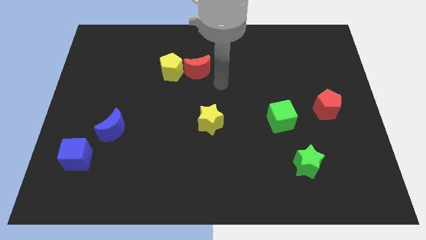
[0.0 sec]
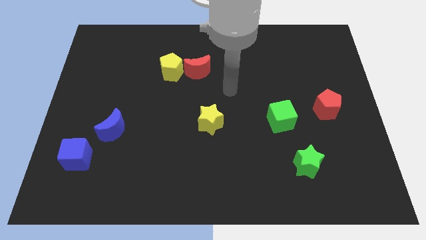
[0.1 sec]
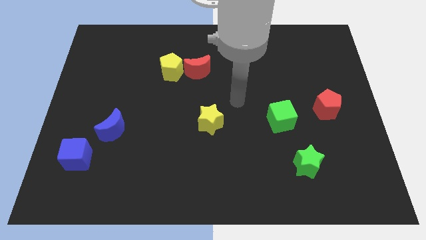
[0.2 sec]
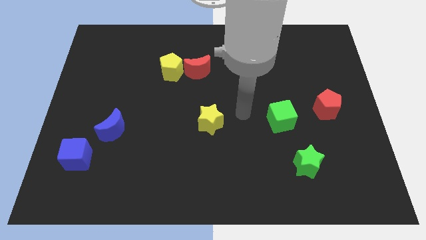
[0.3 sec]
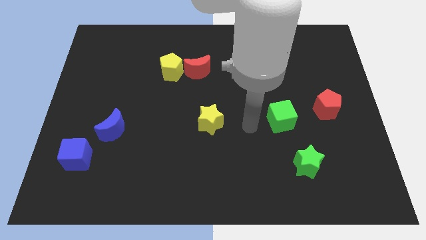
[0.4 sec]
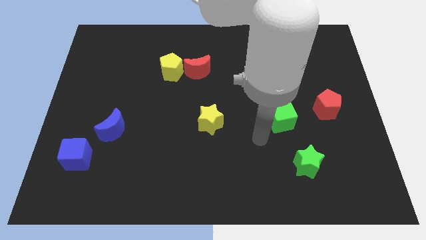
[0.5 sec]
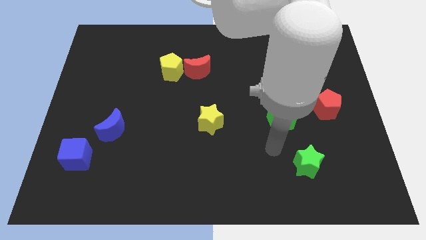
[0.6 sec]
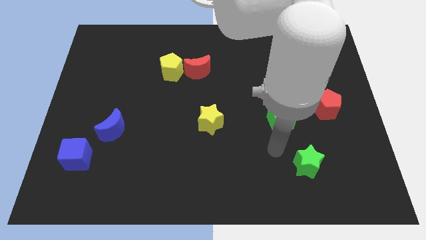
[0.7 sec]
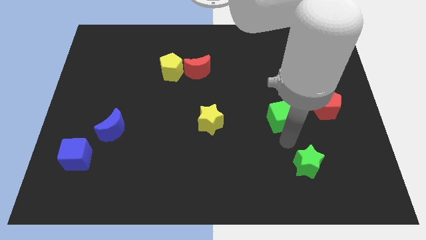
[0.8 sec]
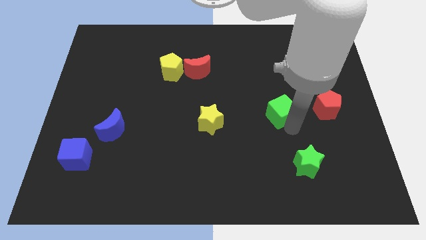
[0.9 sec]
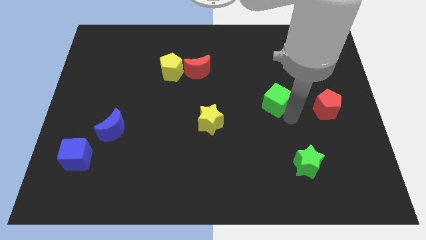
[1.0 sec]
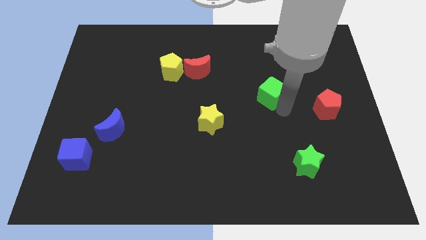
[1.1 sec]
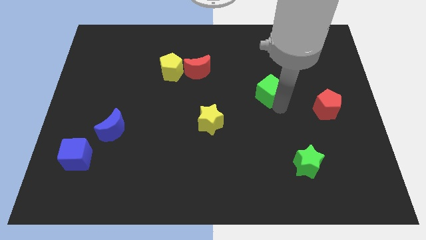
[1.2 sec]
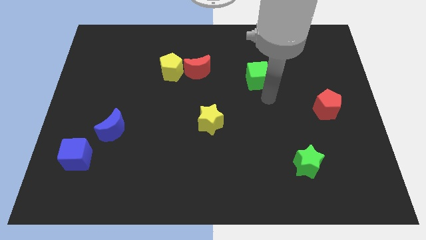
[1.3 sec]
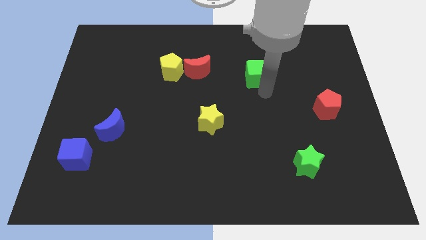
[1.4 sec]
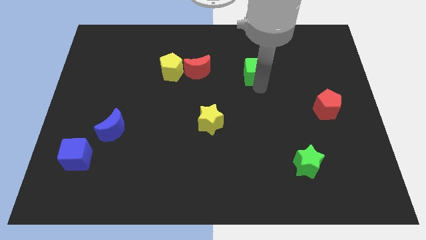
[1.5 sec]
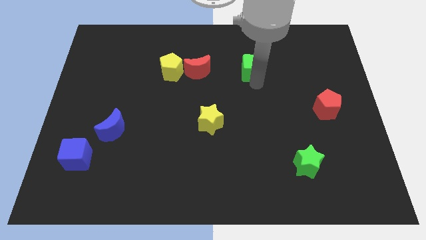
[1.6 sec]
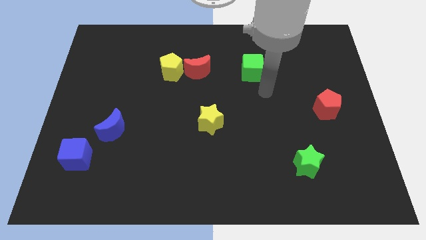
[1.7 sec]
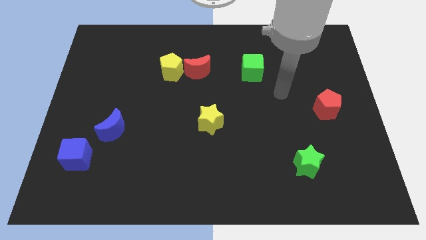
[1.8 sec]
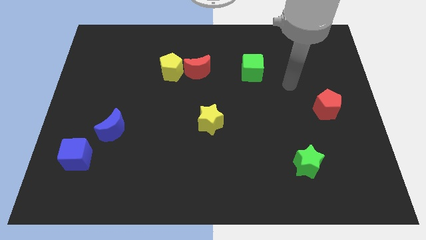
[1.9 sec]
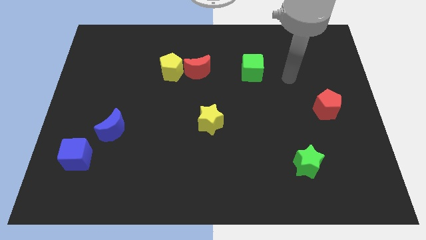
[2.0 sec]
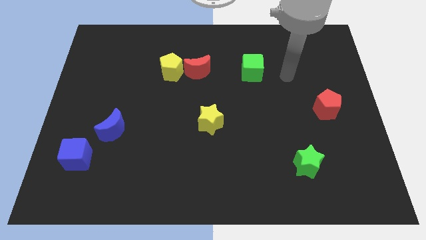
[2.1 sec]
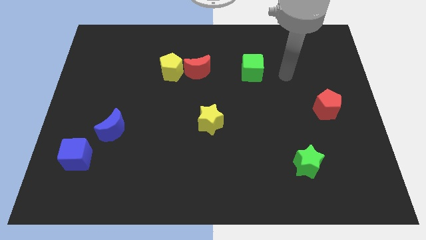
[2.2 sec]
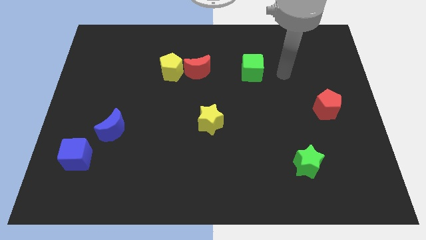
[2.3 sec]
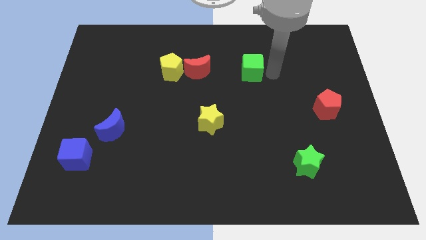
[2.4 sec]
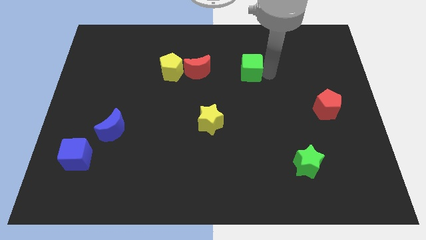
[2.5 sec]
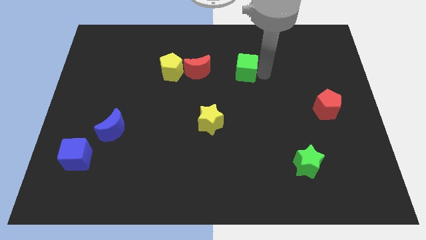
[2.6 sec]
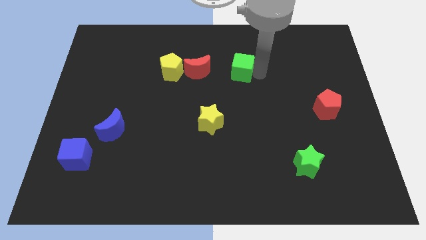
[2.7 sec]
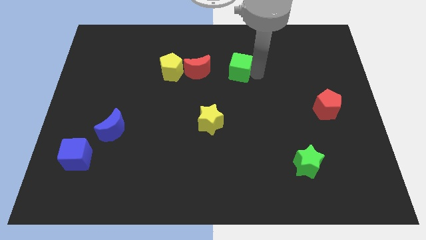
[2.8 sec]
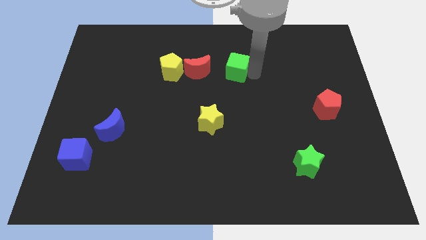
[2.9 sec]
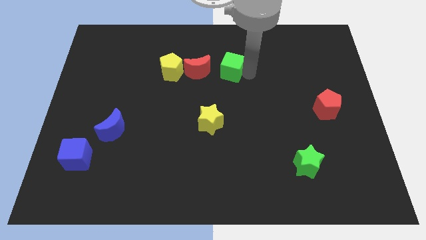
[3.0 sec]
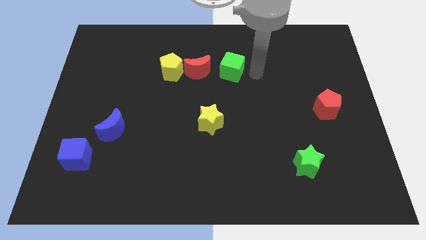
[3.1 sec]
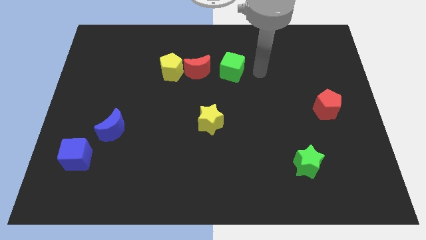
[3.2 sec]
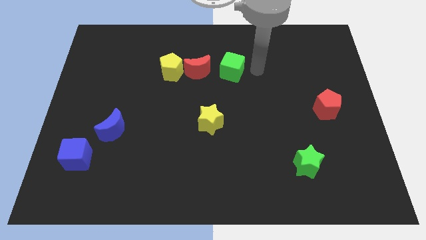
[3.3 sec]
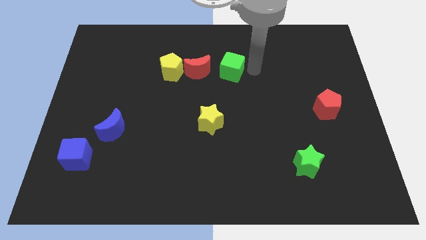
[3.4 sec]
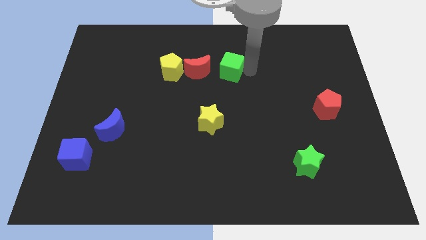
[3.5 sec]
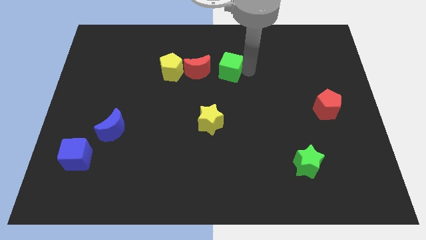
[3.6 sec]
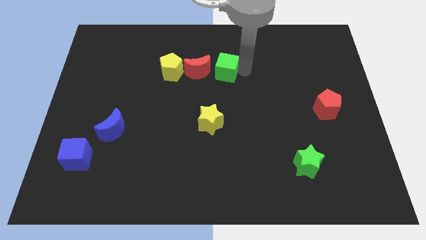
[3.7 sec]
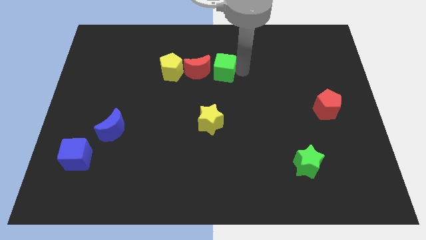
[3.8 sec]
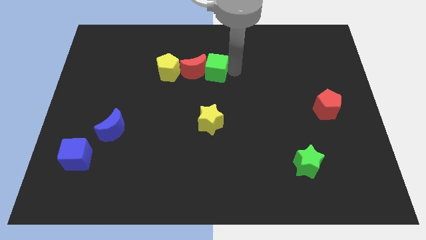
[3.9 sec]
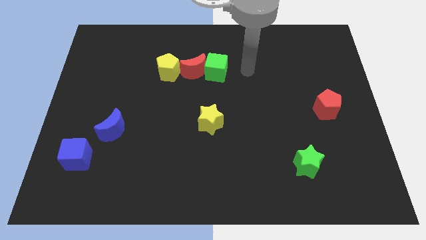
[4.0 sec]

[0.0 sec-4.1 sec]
move the green cube into the right side of red crescent

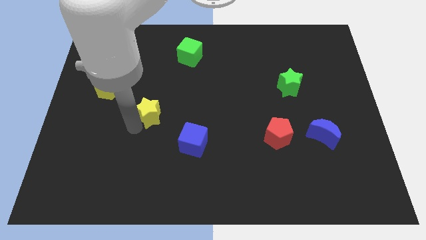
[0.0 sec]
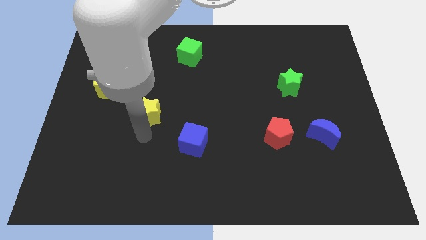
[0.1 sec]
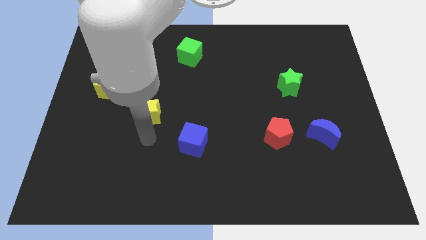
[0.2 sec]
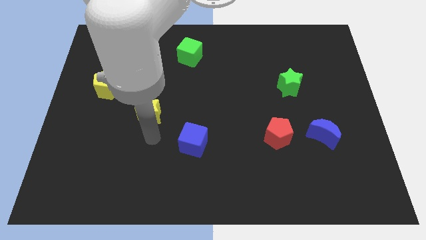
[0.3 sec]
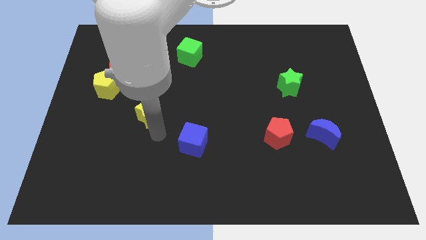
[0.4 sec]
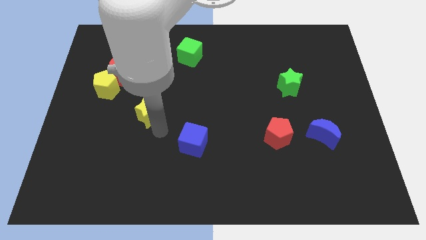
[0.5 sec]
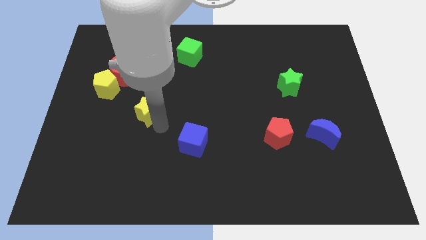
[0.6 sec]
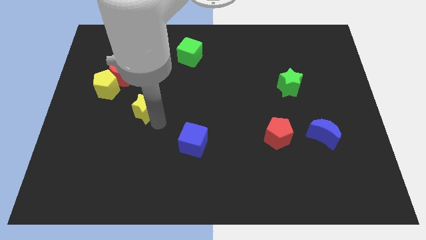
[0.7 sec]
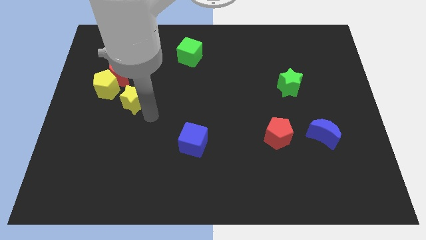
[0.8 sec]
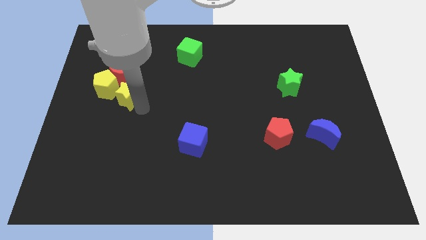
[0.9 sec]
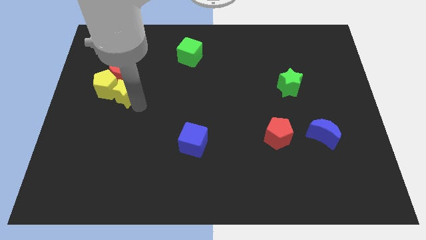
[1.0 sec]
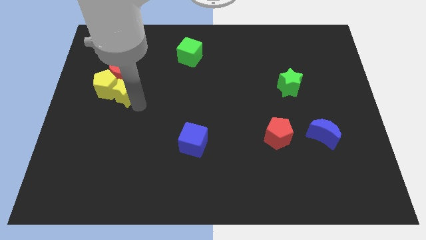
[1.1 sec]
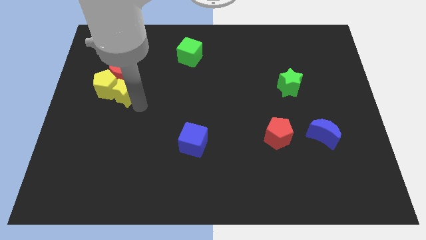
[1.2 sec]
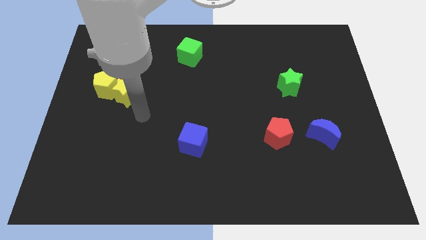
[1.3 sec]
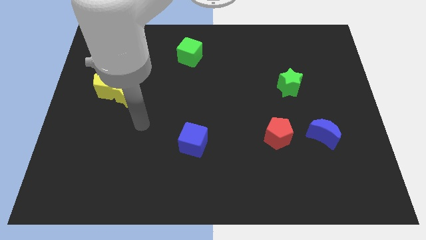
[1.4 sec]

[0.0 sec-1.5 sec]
push the yellow star into the yellow pentagon

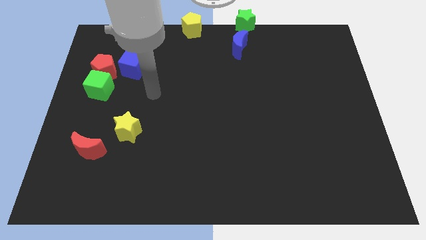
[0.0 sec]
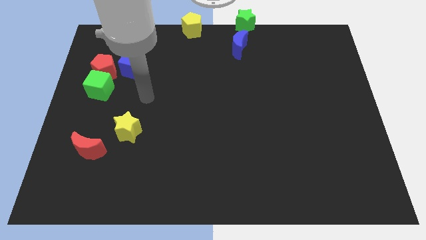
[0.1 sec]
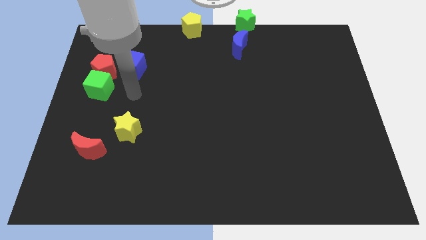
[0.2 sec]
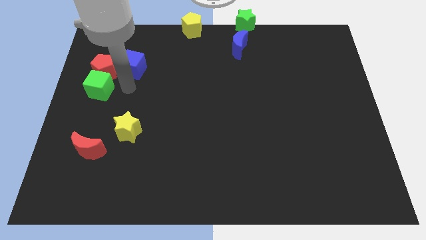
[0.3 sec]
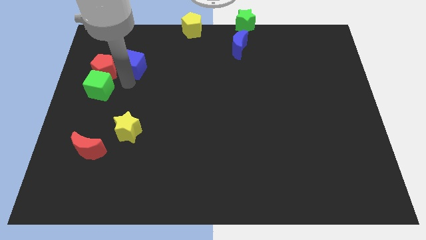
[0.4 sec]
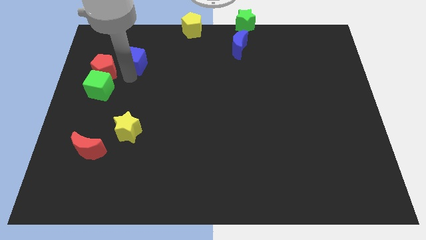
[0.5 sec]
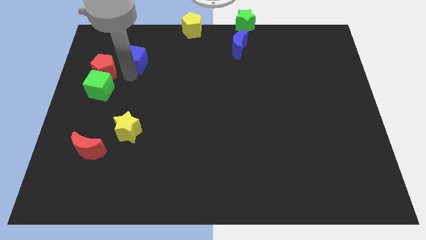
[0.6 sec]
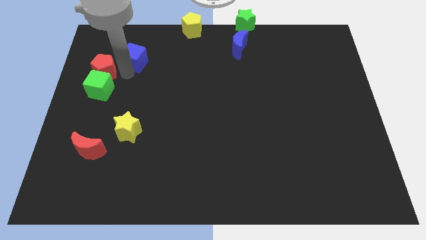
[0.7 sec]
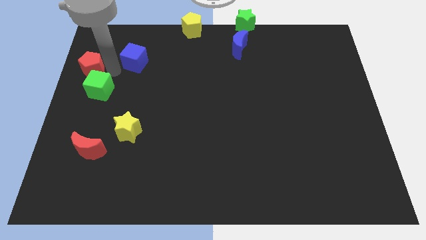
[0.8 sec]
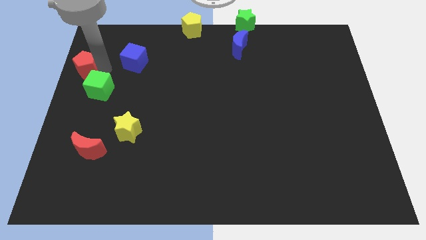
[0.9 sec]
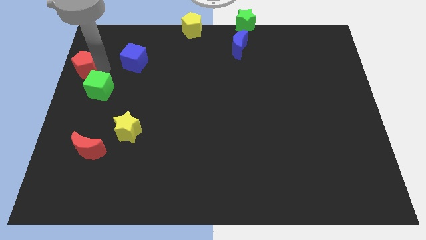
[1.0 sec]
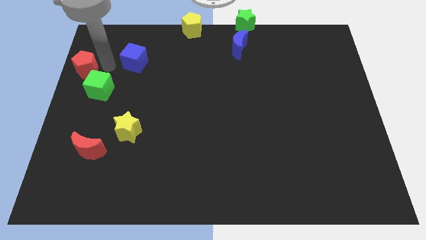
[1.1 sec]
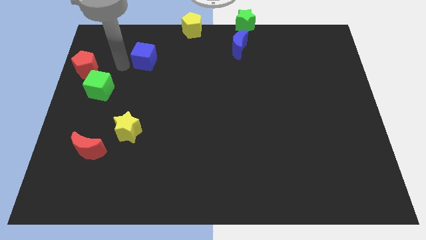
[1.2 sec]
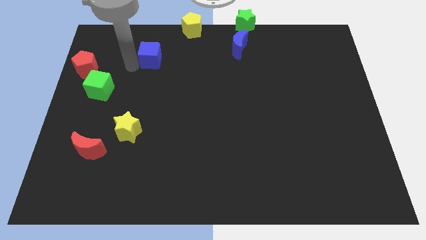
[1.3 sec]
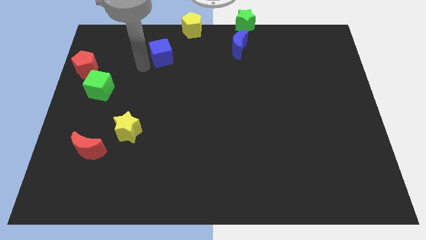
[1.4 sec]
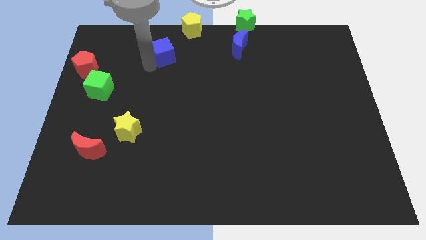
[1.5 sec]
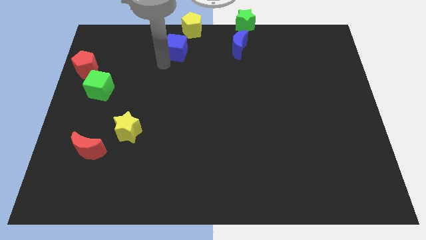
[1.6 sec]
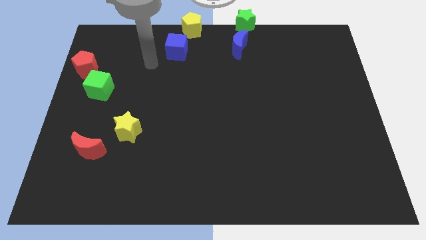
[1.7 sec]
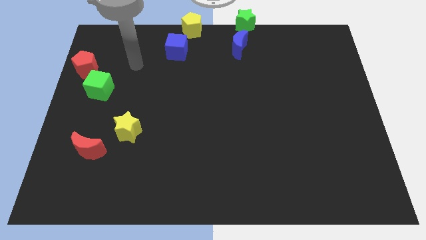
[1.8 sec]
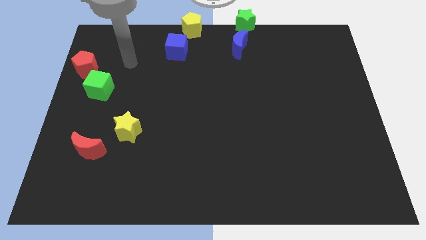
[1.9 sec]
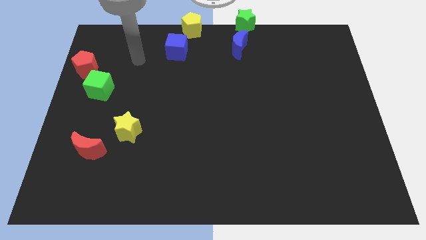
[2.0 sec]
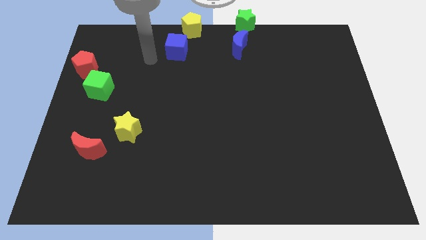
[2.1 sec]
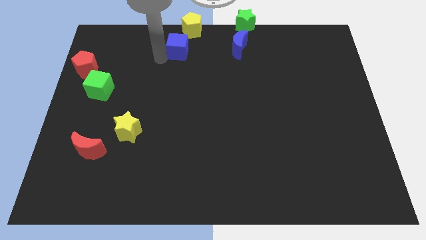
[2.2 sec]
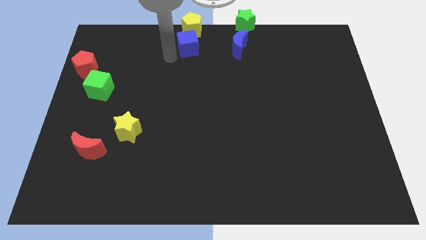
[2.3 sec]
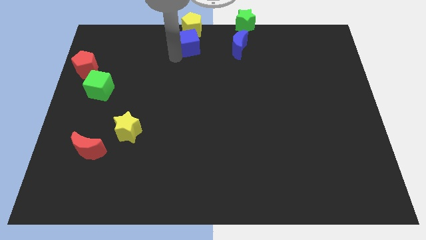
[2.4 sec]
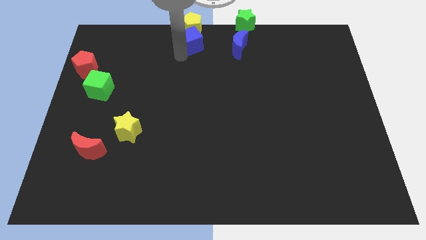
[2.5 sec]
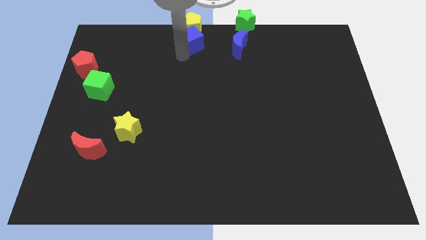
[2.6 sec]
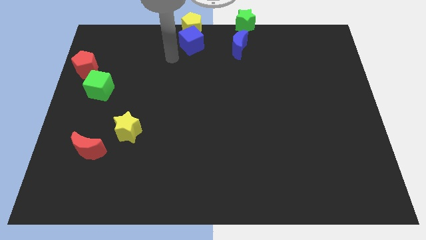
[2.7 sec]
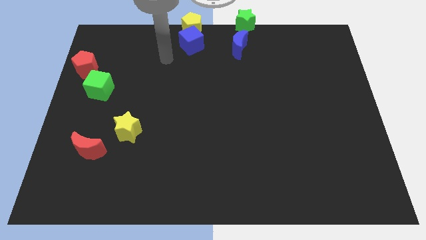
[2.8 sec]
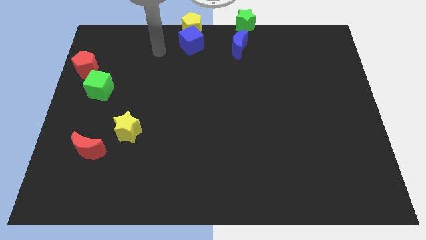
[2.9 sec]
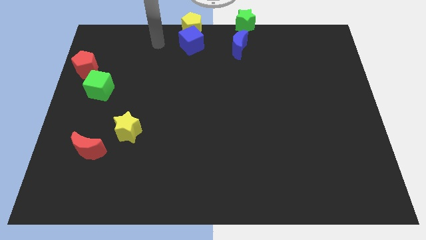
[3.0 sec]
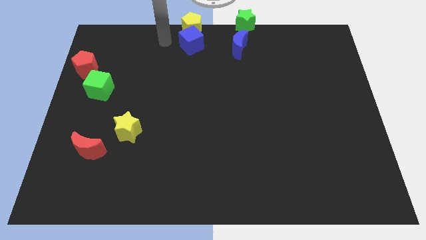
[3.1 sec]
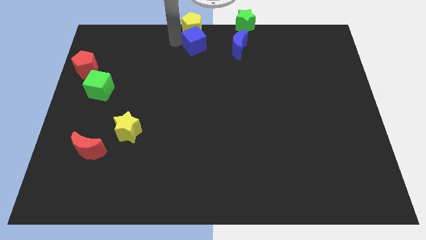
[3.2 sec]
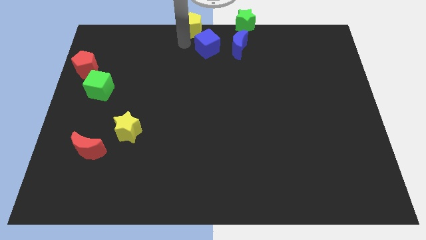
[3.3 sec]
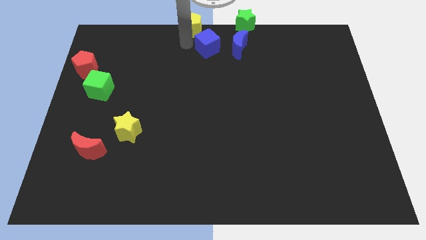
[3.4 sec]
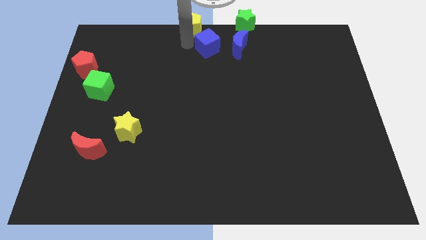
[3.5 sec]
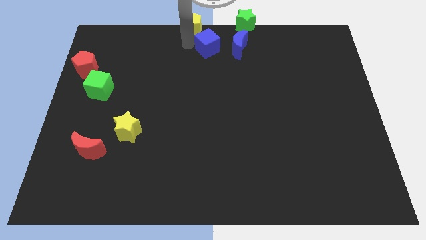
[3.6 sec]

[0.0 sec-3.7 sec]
move the blue cube to the bottom right to the yellow pentagon
